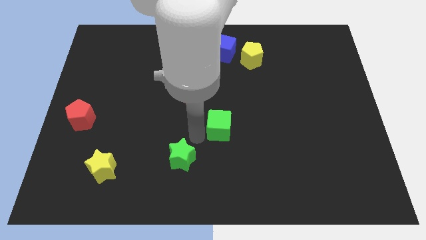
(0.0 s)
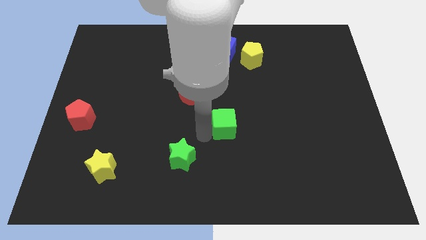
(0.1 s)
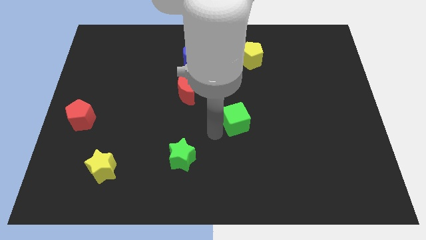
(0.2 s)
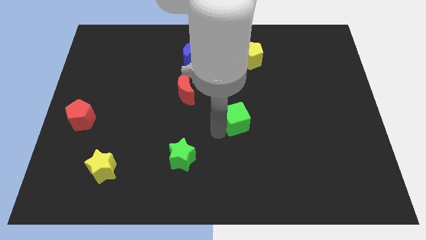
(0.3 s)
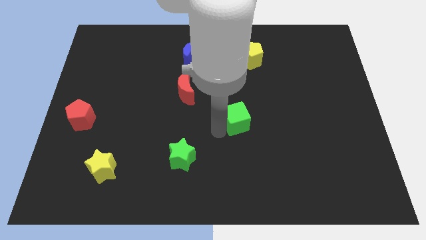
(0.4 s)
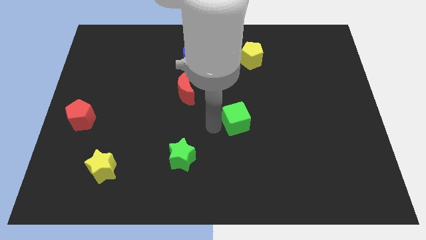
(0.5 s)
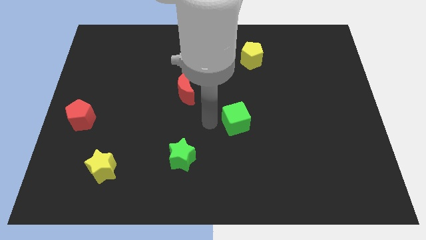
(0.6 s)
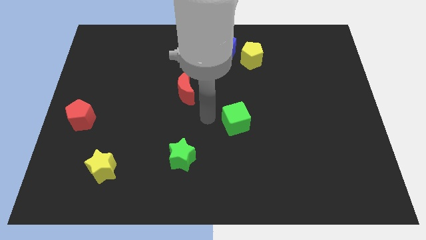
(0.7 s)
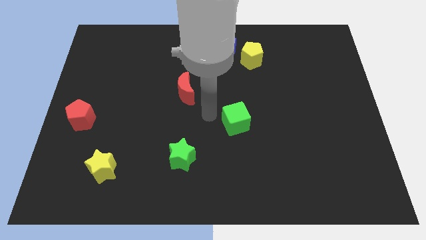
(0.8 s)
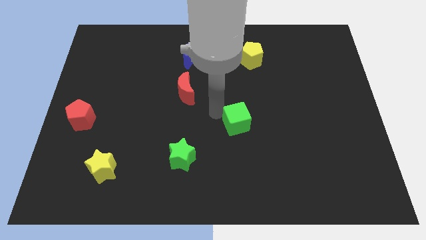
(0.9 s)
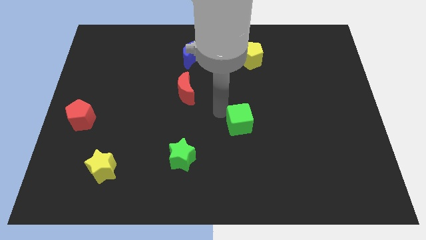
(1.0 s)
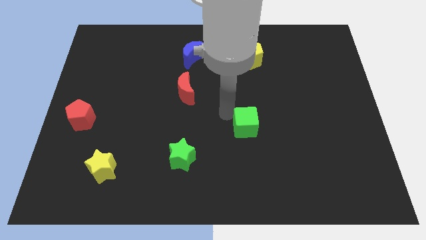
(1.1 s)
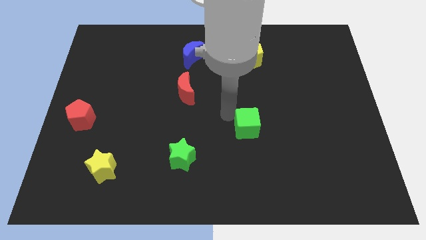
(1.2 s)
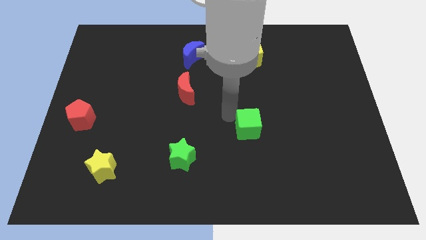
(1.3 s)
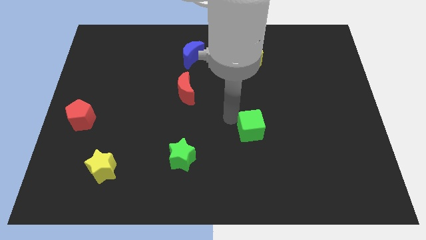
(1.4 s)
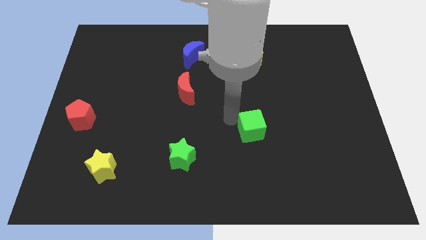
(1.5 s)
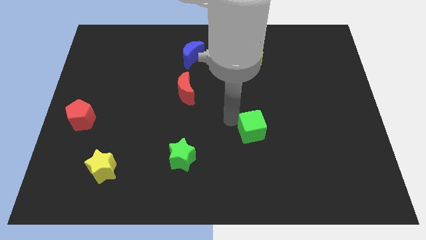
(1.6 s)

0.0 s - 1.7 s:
move the green cube slightly to the left above green star

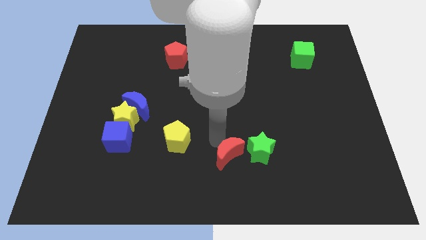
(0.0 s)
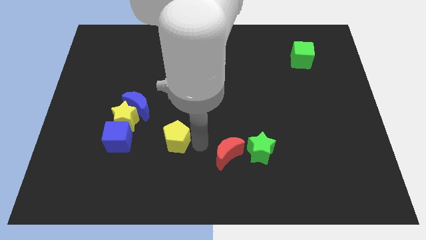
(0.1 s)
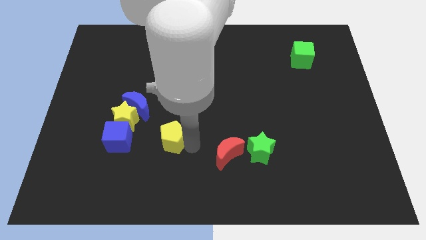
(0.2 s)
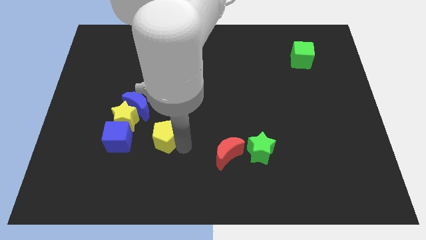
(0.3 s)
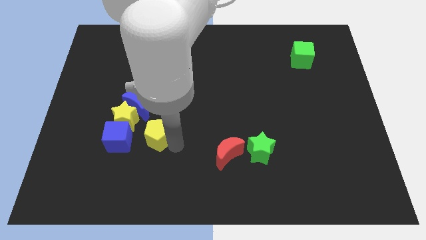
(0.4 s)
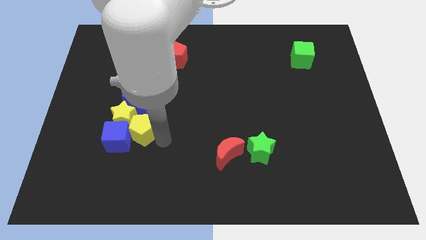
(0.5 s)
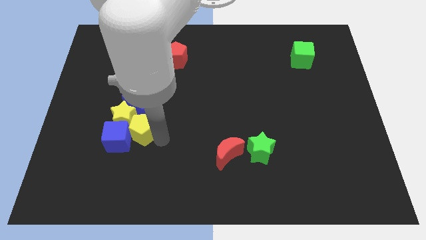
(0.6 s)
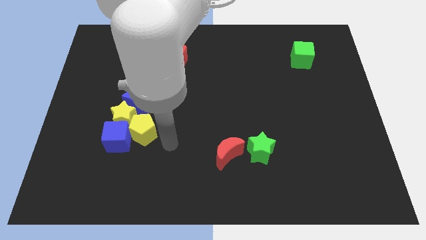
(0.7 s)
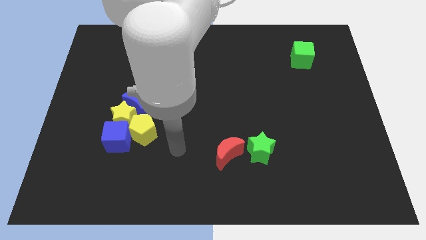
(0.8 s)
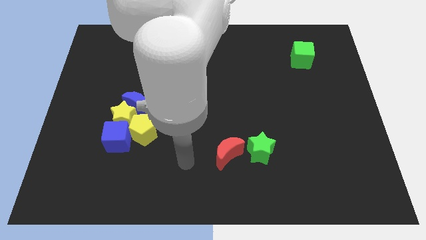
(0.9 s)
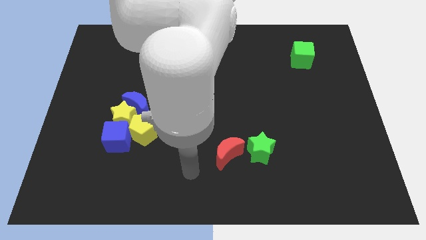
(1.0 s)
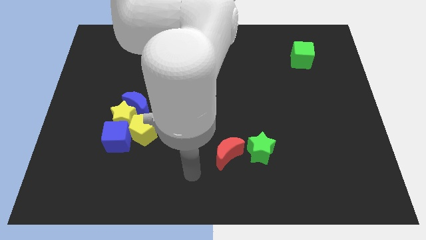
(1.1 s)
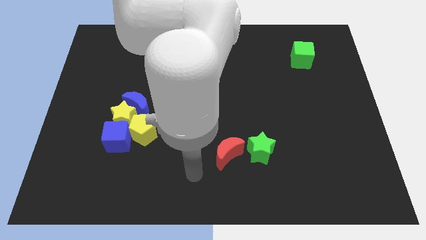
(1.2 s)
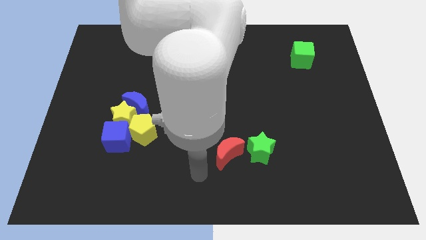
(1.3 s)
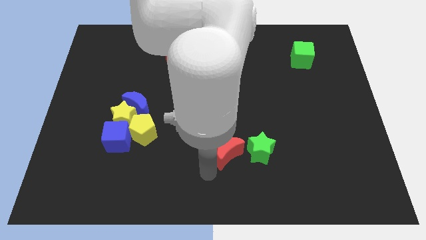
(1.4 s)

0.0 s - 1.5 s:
move yellow pentagon in to yellow star

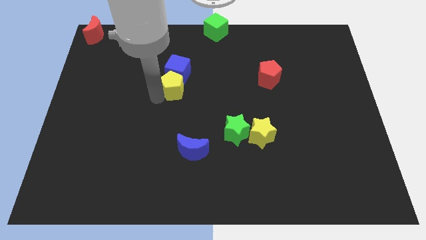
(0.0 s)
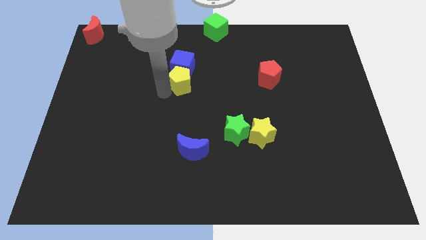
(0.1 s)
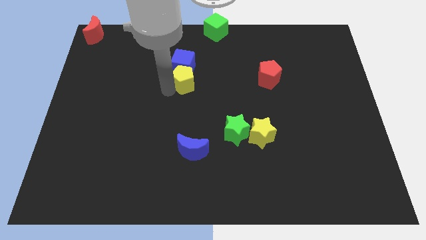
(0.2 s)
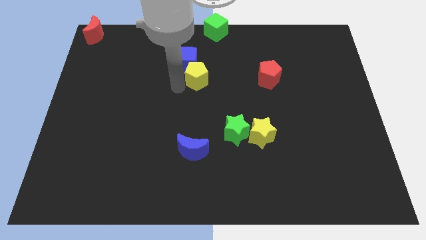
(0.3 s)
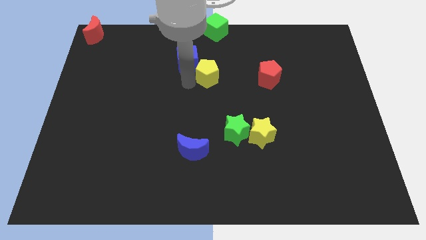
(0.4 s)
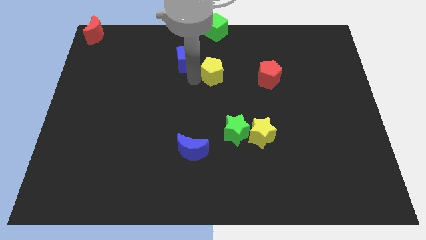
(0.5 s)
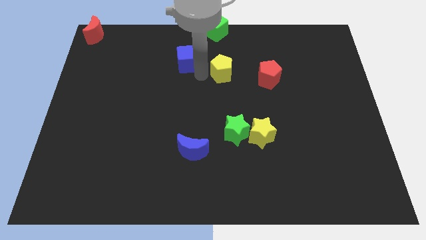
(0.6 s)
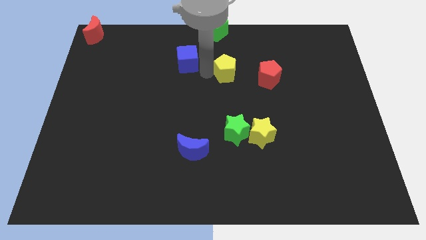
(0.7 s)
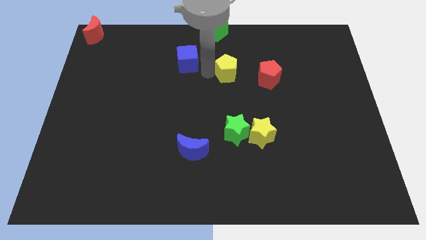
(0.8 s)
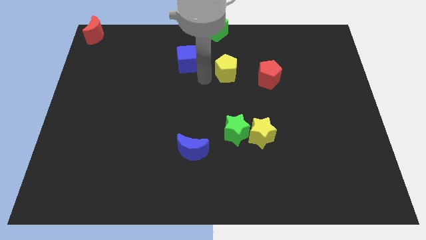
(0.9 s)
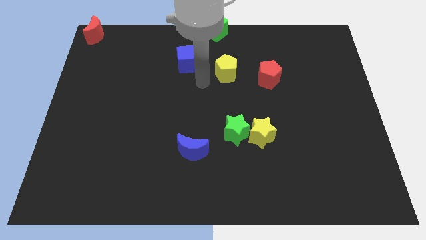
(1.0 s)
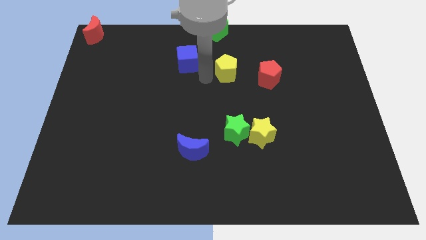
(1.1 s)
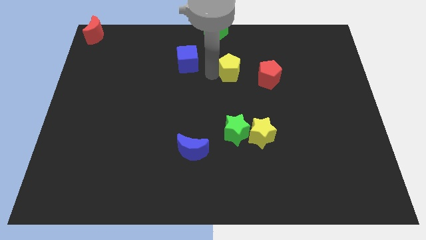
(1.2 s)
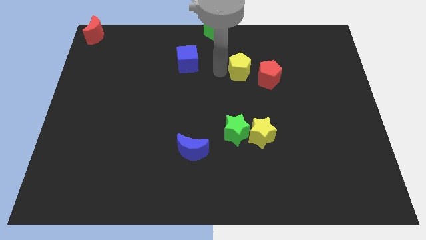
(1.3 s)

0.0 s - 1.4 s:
push the yellow pentagon left to the red pentagon

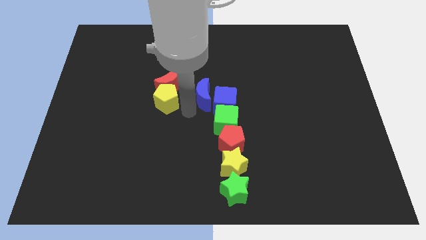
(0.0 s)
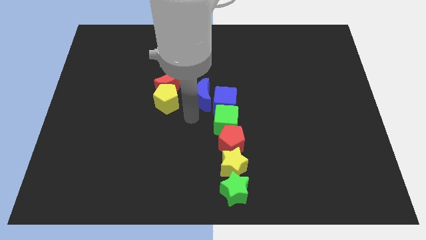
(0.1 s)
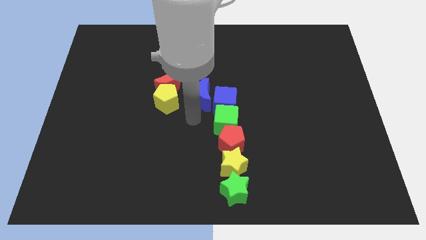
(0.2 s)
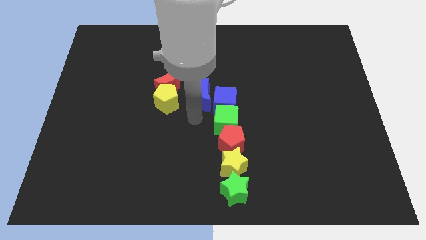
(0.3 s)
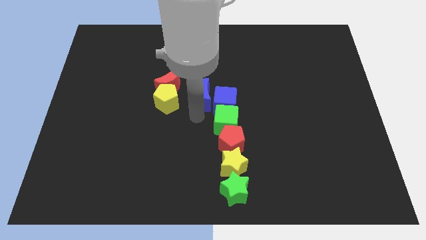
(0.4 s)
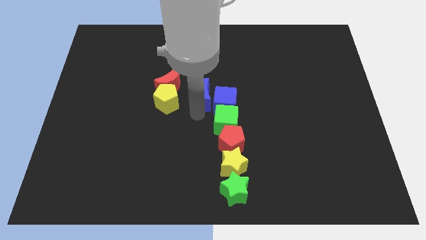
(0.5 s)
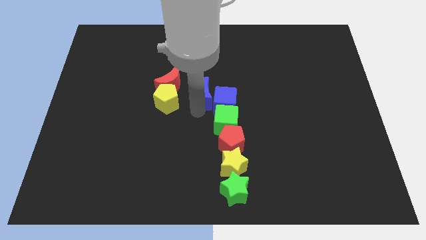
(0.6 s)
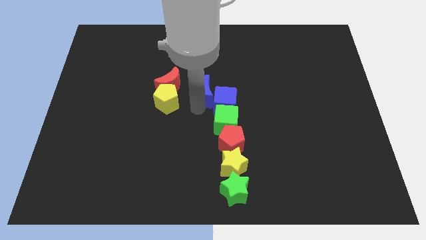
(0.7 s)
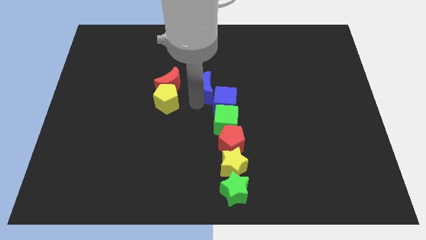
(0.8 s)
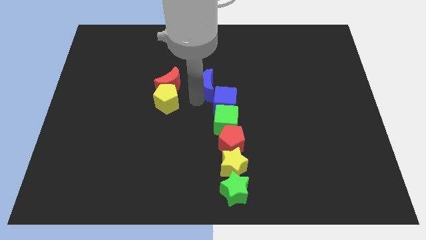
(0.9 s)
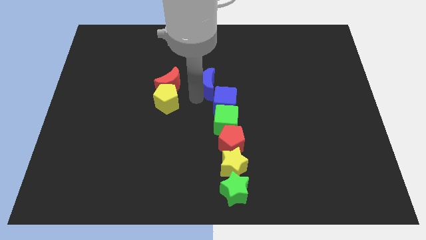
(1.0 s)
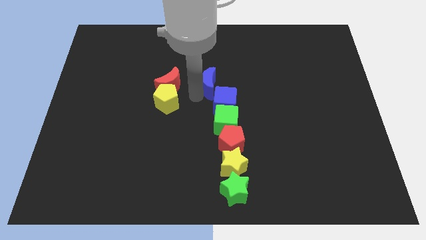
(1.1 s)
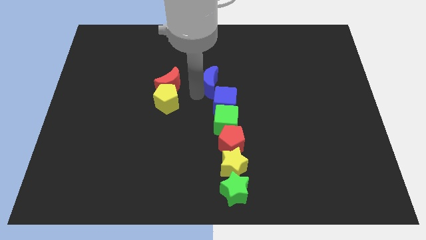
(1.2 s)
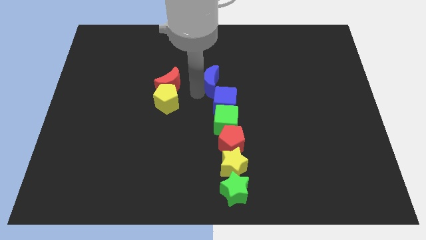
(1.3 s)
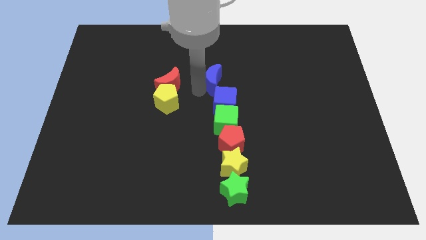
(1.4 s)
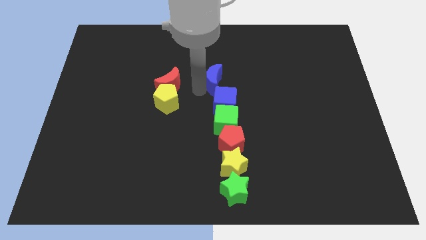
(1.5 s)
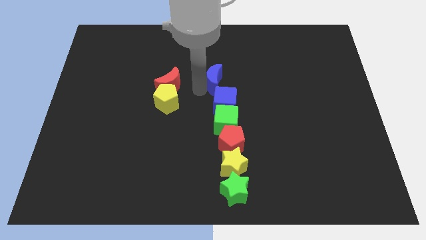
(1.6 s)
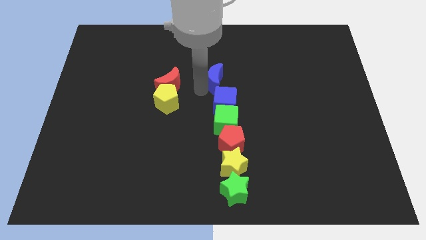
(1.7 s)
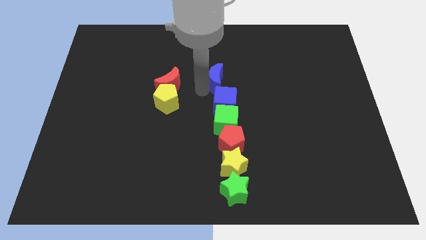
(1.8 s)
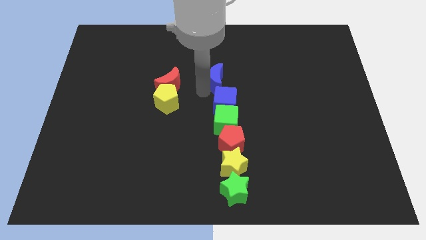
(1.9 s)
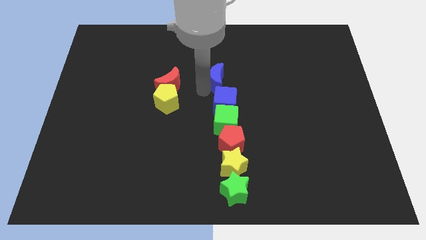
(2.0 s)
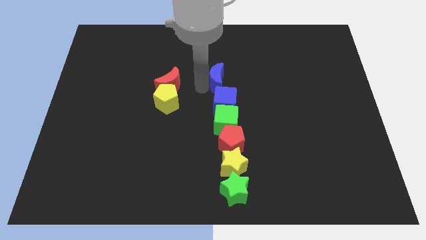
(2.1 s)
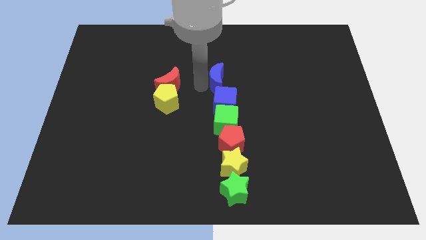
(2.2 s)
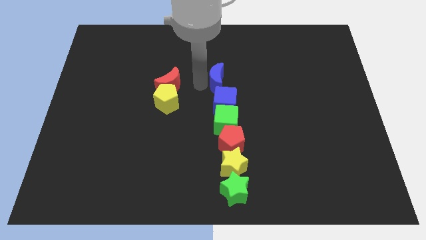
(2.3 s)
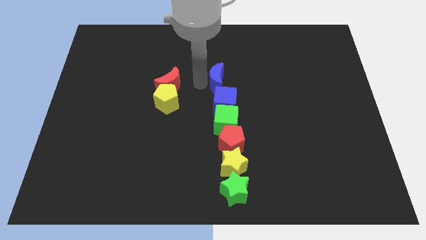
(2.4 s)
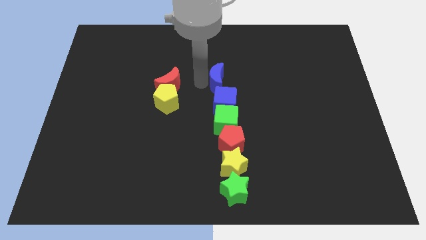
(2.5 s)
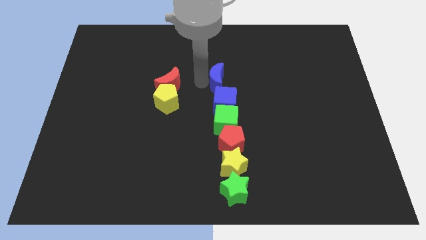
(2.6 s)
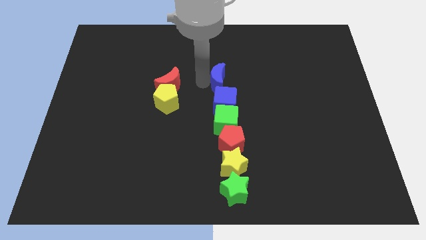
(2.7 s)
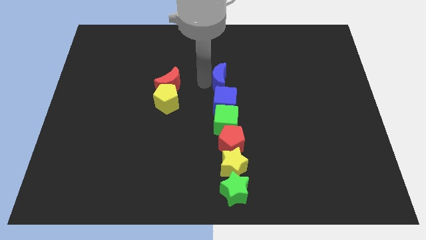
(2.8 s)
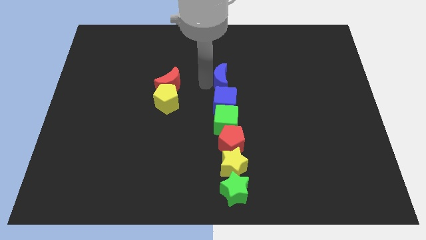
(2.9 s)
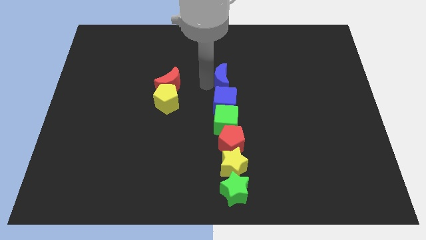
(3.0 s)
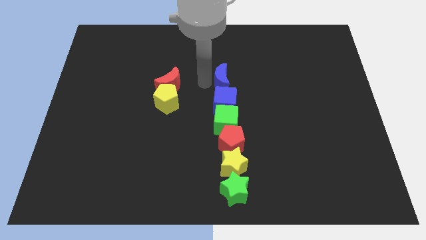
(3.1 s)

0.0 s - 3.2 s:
place the blue moon to the top of the blue cube

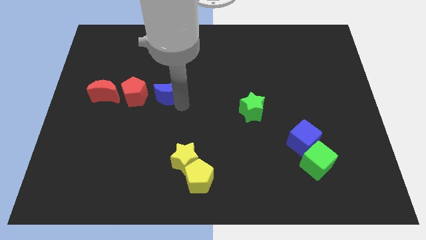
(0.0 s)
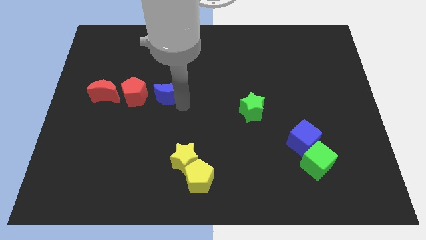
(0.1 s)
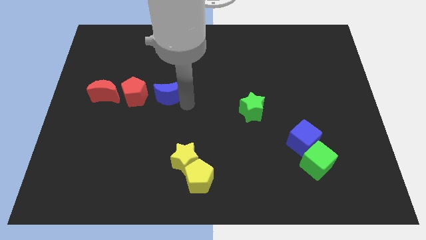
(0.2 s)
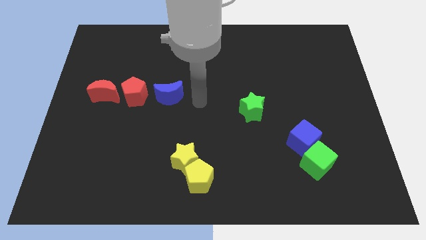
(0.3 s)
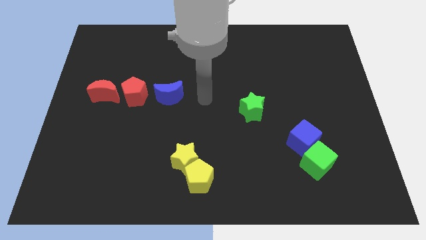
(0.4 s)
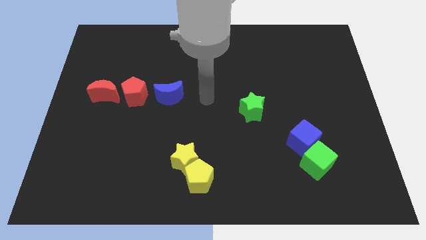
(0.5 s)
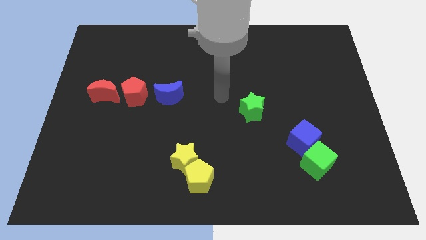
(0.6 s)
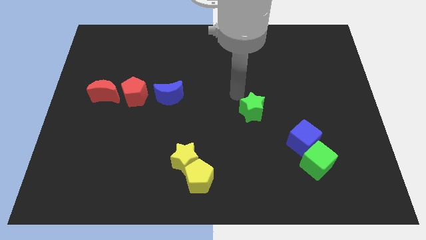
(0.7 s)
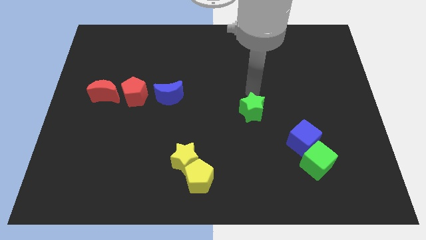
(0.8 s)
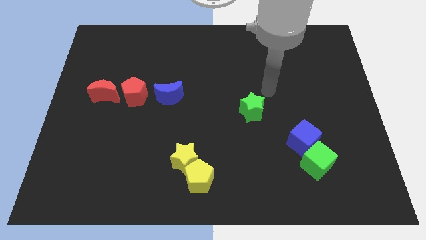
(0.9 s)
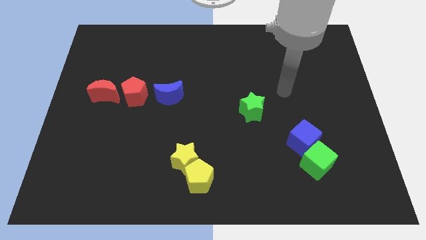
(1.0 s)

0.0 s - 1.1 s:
move your arm away from the blue moon
